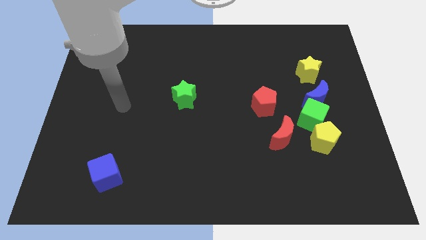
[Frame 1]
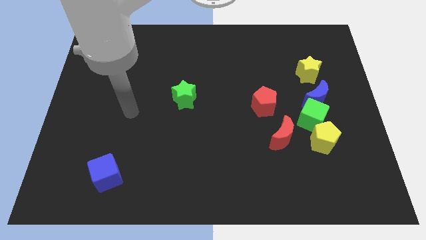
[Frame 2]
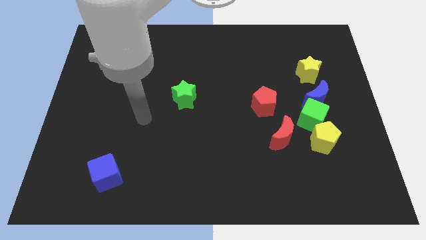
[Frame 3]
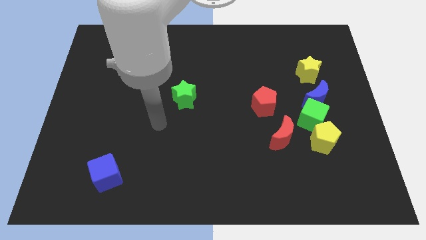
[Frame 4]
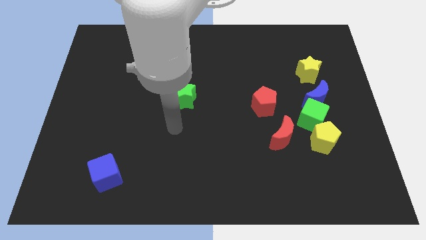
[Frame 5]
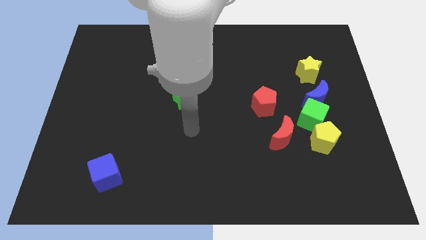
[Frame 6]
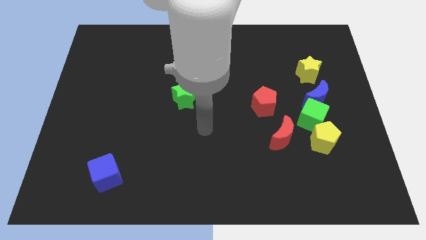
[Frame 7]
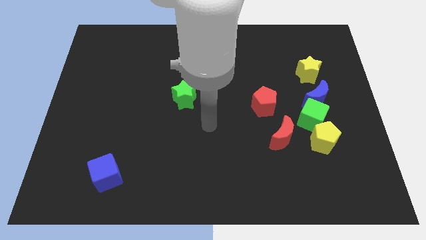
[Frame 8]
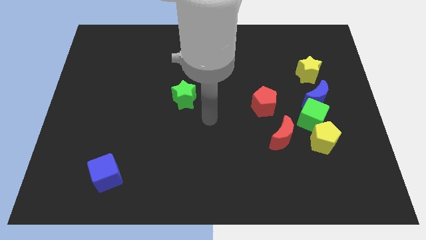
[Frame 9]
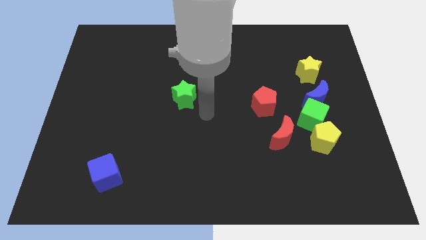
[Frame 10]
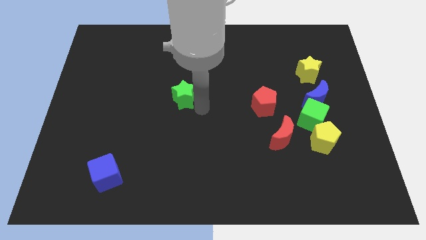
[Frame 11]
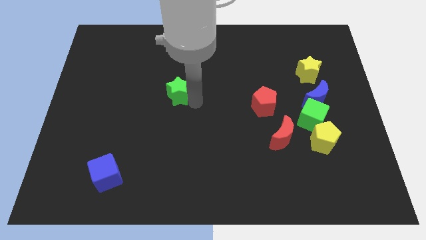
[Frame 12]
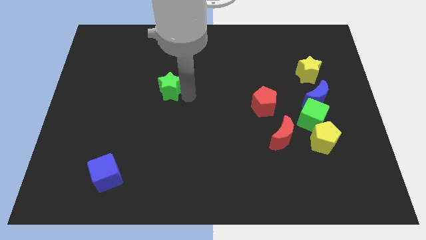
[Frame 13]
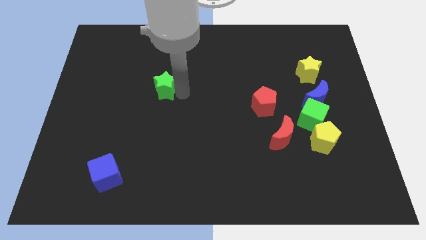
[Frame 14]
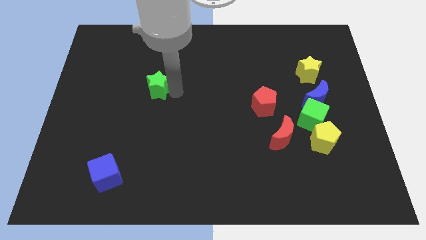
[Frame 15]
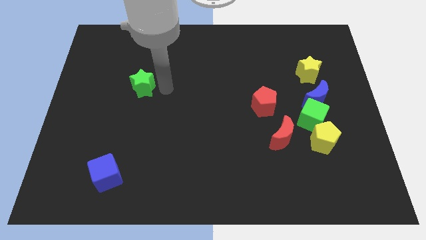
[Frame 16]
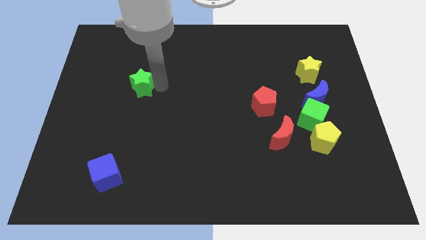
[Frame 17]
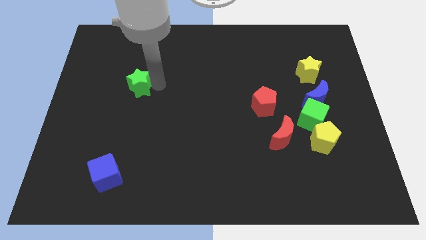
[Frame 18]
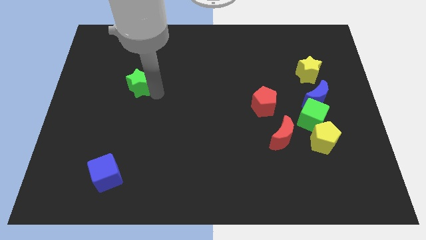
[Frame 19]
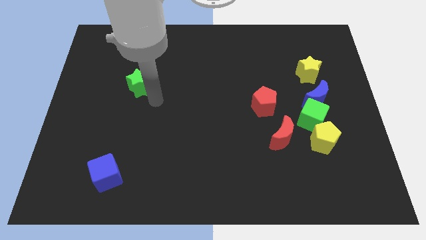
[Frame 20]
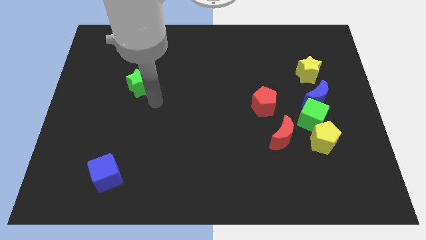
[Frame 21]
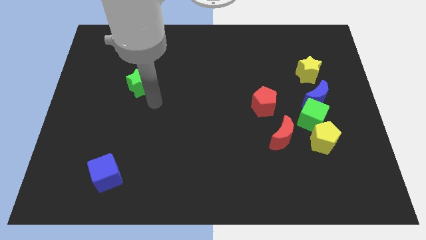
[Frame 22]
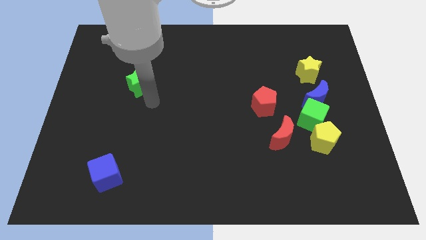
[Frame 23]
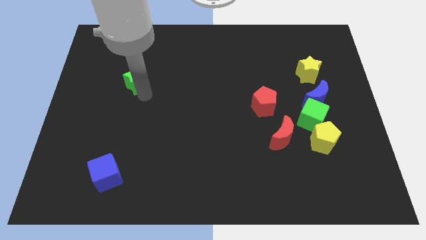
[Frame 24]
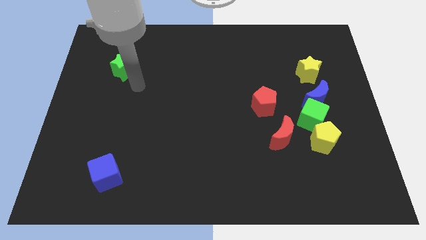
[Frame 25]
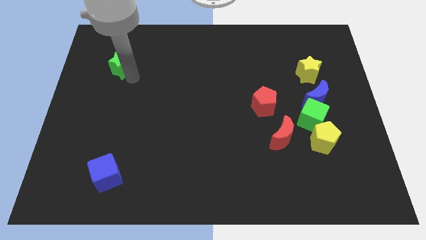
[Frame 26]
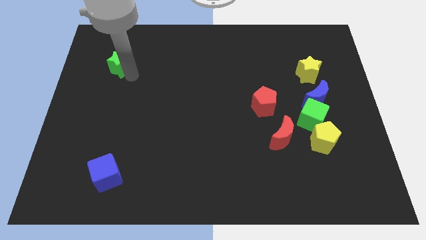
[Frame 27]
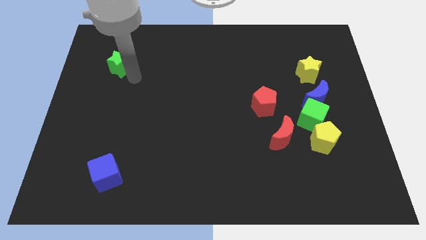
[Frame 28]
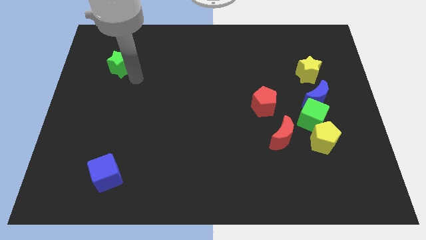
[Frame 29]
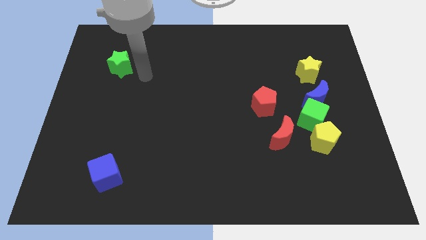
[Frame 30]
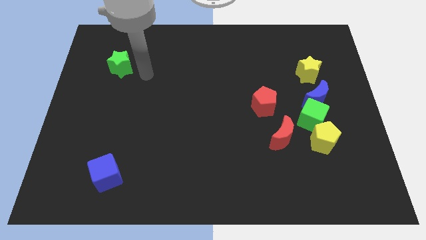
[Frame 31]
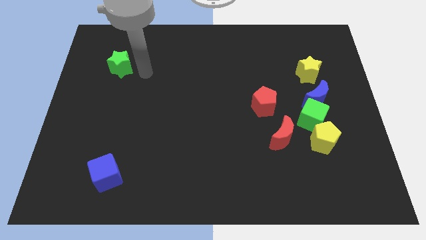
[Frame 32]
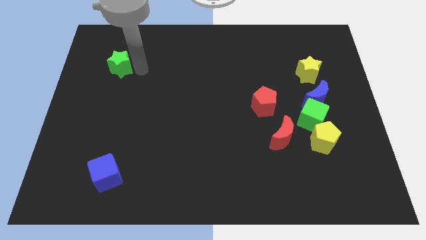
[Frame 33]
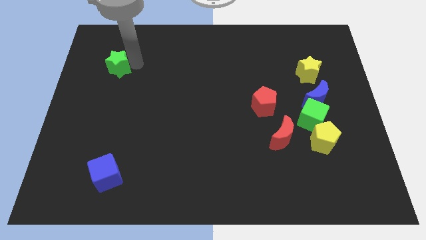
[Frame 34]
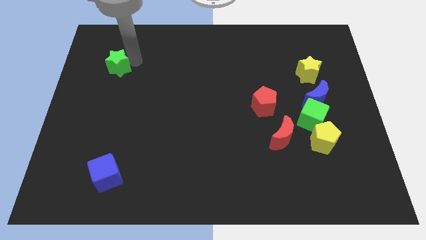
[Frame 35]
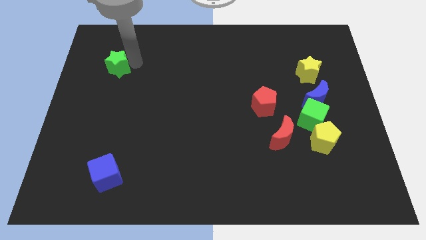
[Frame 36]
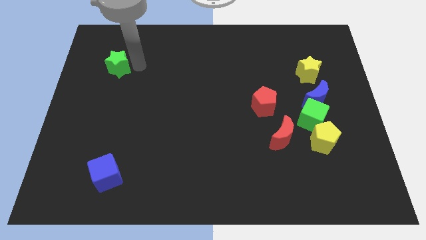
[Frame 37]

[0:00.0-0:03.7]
place the green star above the blue cube

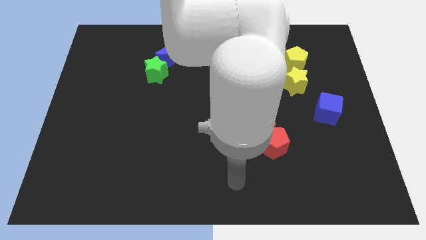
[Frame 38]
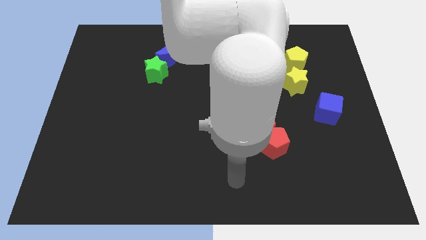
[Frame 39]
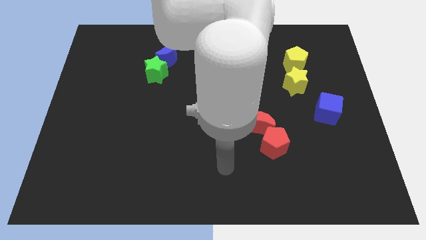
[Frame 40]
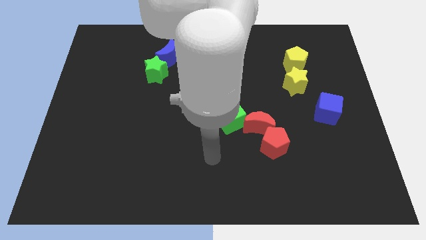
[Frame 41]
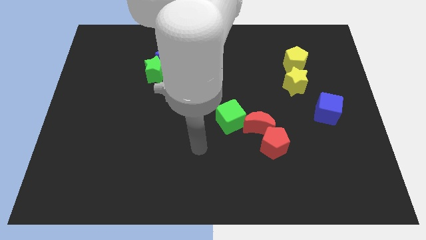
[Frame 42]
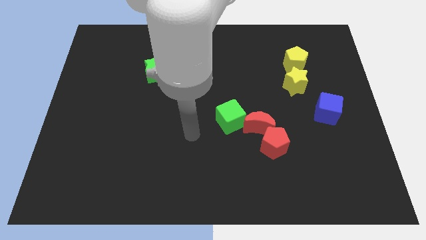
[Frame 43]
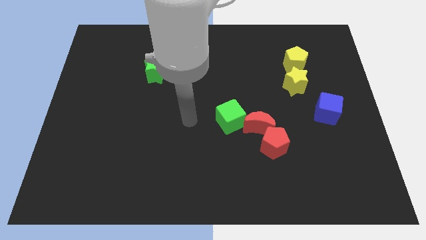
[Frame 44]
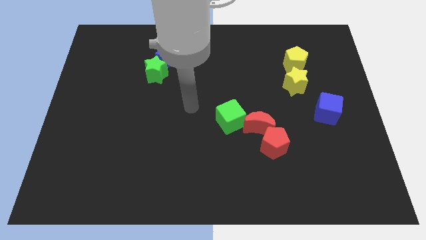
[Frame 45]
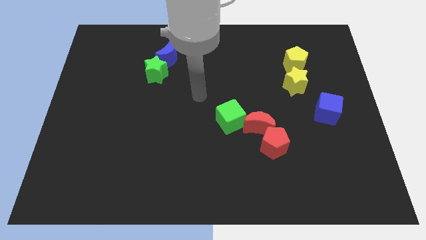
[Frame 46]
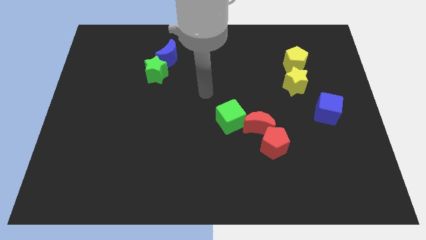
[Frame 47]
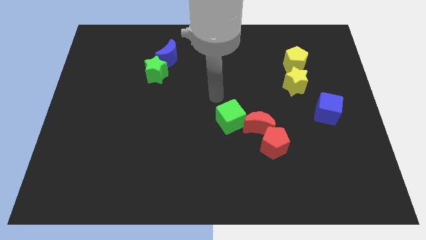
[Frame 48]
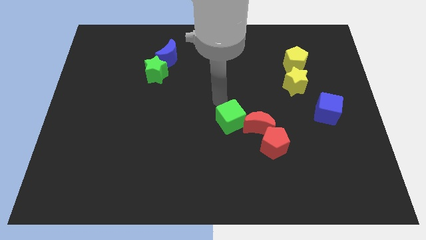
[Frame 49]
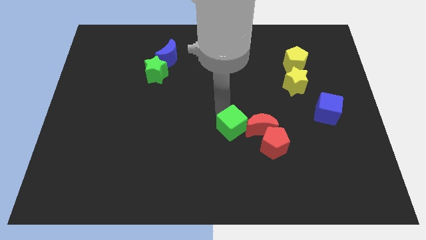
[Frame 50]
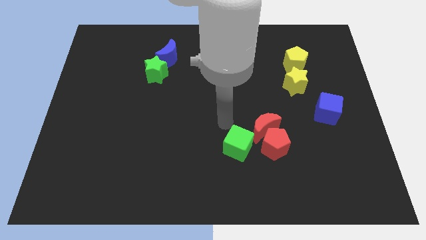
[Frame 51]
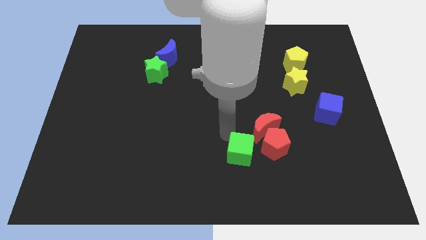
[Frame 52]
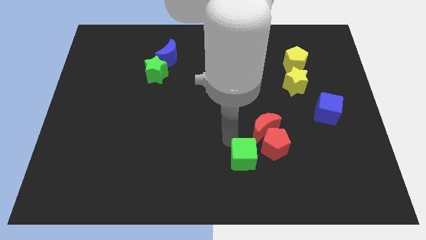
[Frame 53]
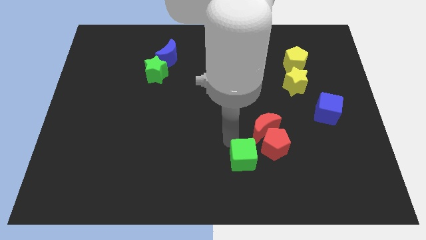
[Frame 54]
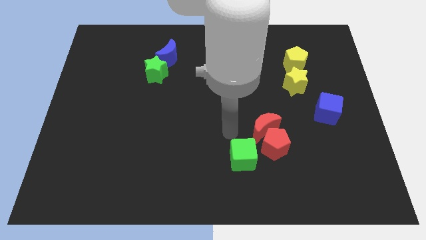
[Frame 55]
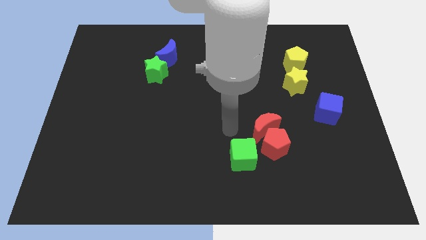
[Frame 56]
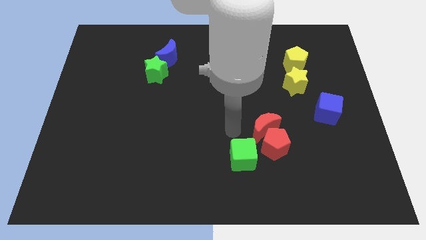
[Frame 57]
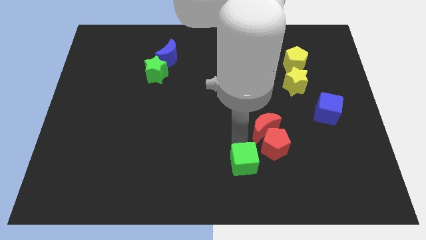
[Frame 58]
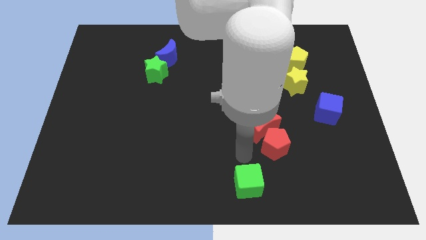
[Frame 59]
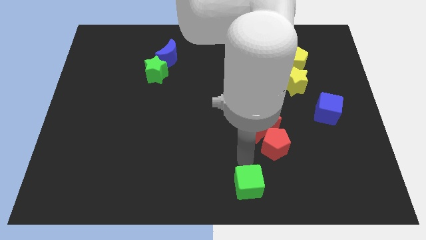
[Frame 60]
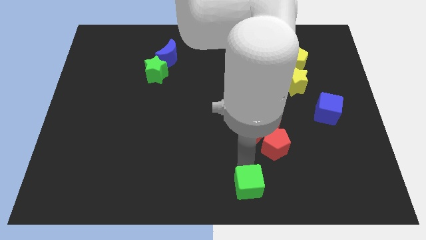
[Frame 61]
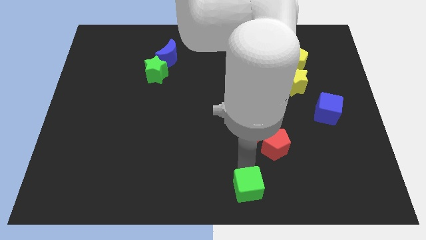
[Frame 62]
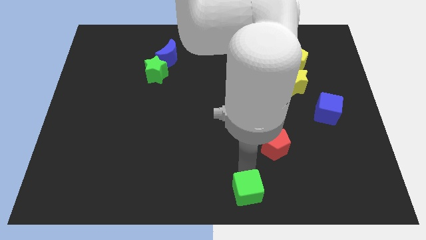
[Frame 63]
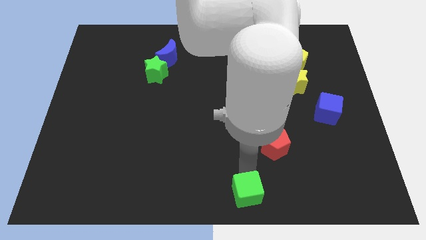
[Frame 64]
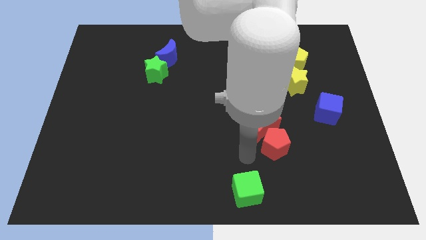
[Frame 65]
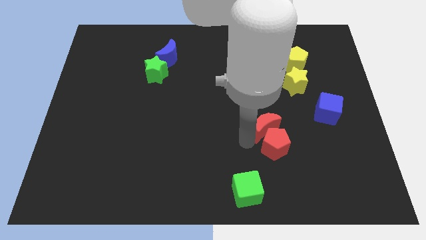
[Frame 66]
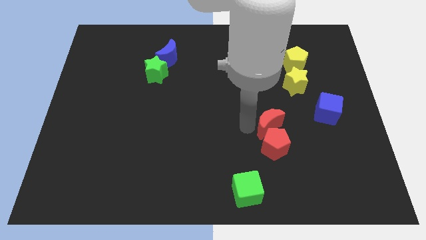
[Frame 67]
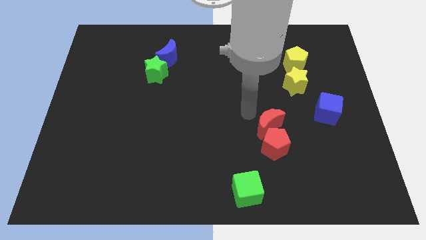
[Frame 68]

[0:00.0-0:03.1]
move the green cube towards the bottom center of the board

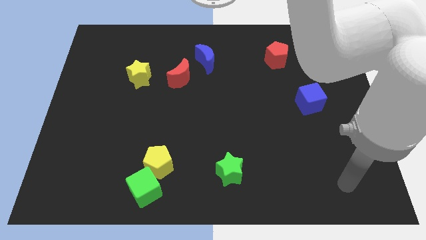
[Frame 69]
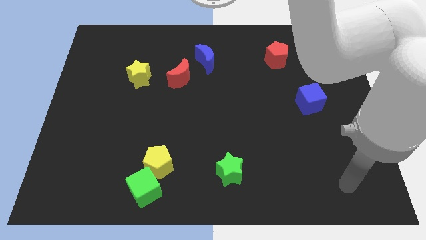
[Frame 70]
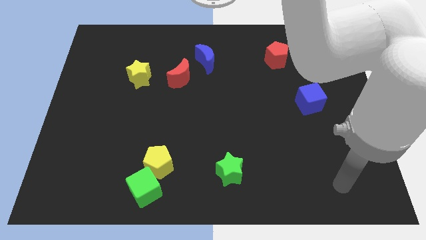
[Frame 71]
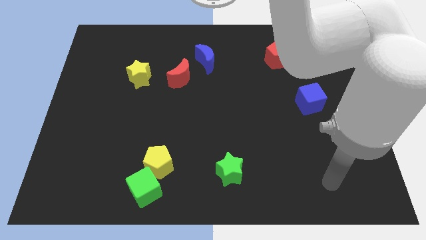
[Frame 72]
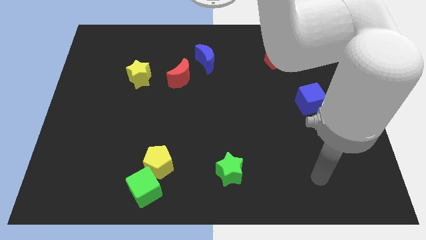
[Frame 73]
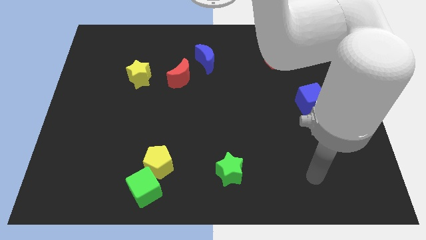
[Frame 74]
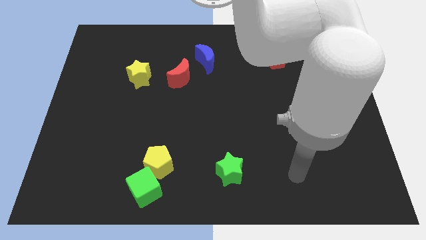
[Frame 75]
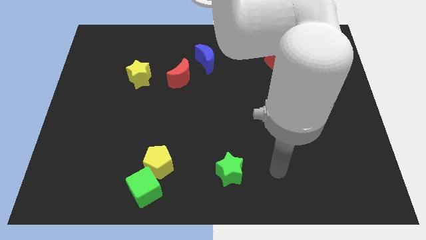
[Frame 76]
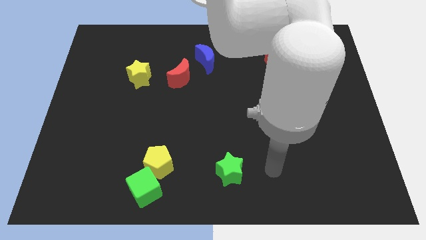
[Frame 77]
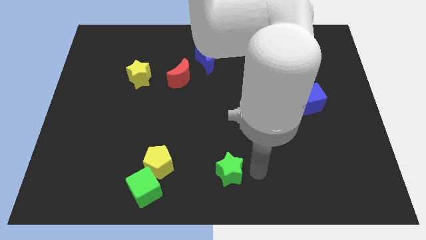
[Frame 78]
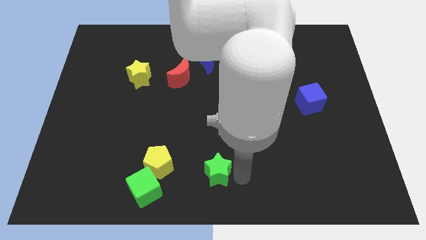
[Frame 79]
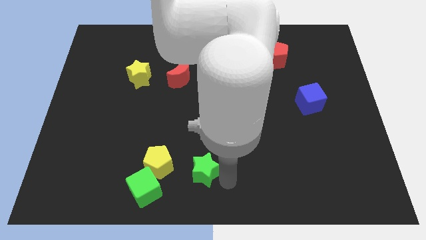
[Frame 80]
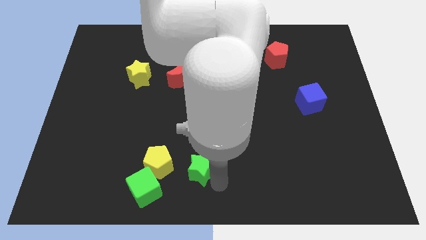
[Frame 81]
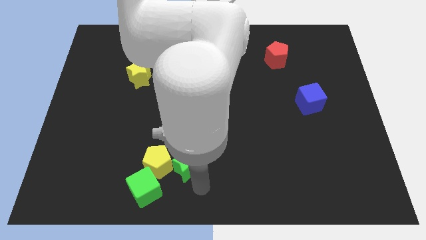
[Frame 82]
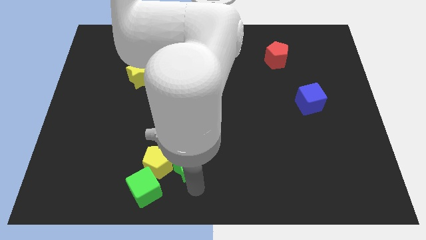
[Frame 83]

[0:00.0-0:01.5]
push the green star into the yellow pentagon

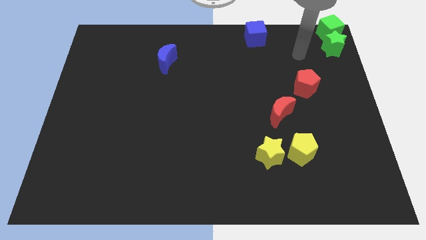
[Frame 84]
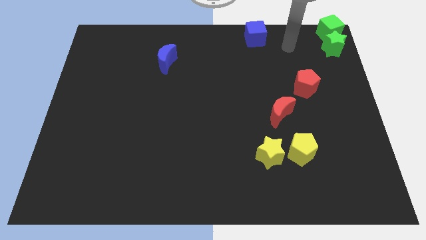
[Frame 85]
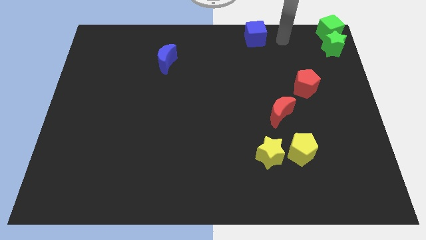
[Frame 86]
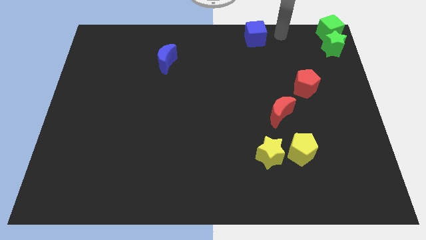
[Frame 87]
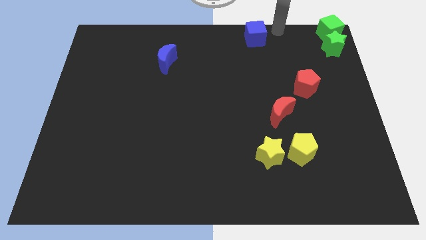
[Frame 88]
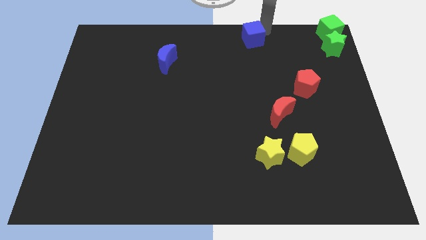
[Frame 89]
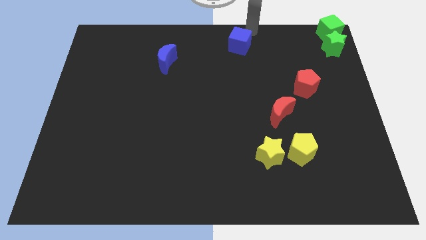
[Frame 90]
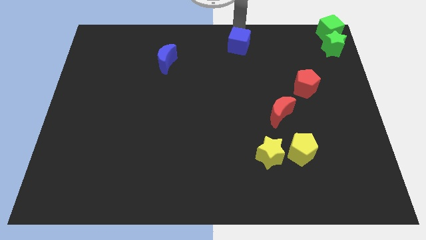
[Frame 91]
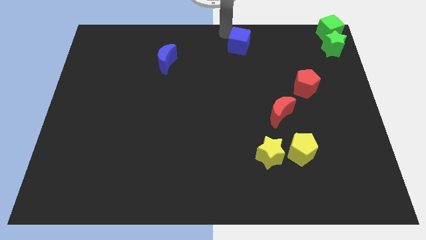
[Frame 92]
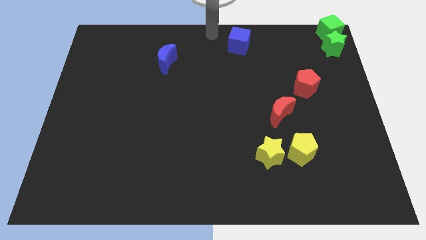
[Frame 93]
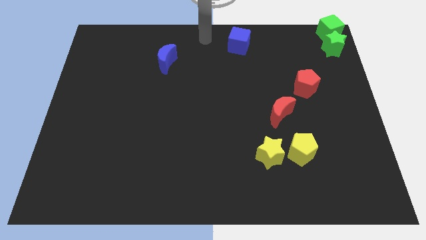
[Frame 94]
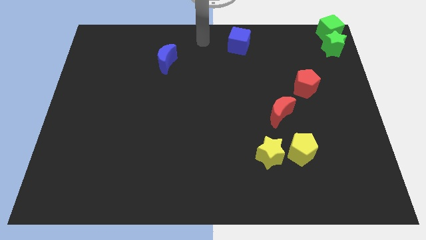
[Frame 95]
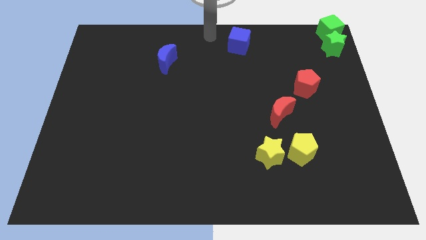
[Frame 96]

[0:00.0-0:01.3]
move the blue cube slightly left
